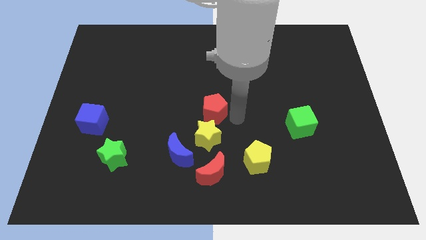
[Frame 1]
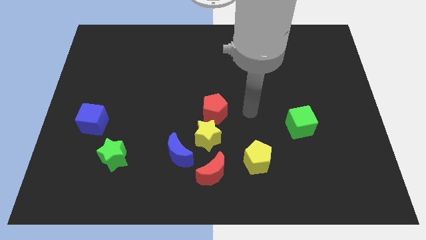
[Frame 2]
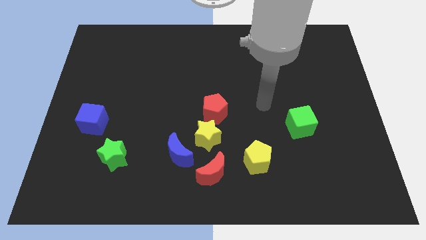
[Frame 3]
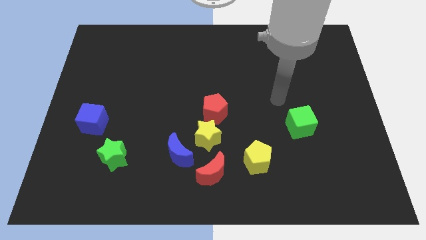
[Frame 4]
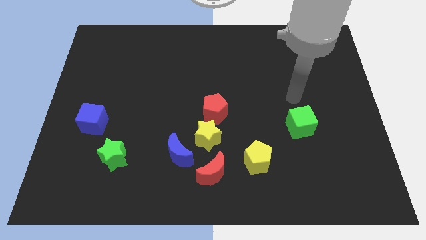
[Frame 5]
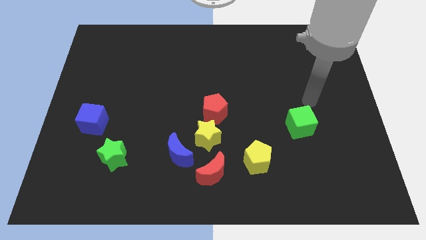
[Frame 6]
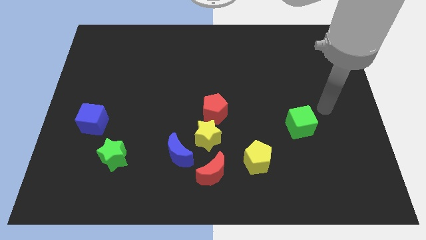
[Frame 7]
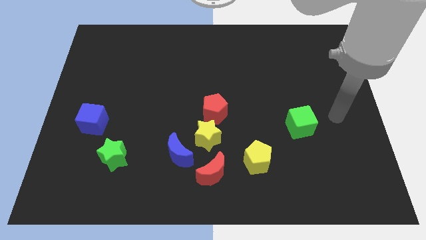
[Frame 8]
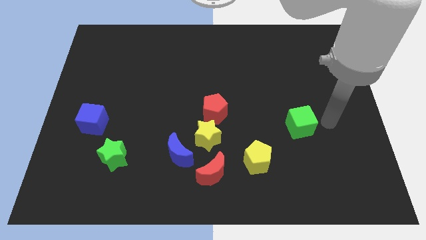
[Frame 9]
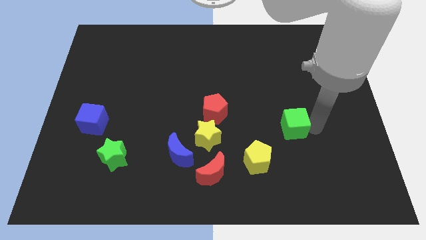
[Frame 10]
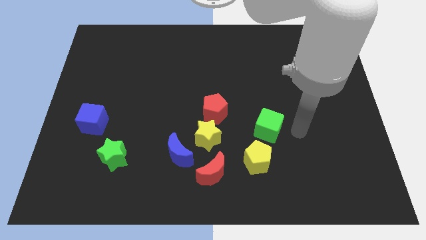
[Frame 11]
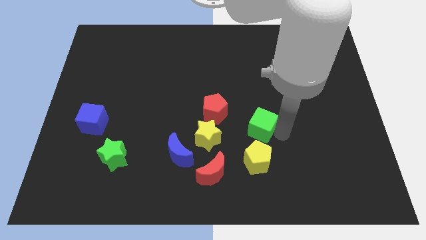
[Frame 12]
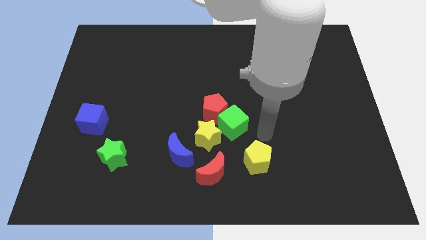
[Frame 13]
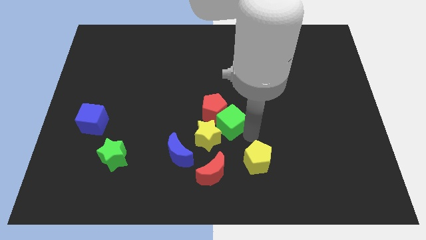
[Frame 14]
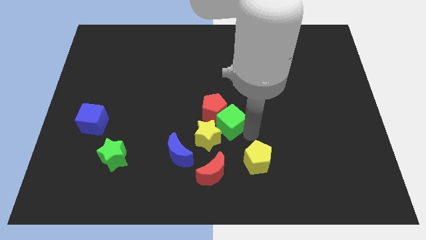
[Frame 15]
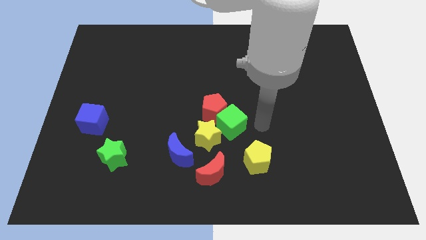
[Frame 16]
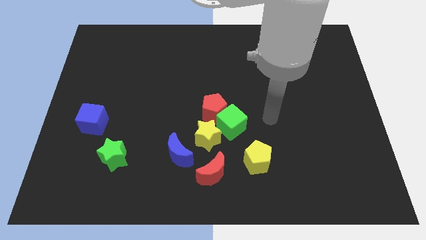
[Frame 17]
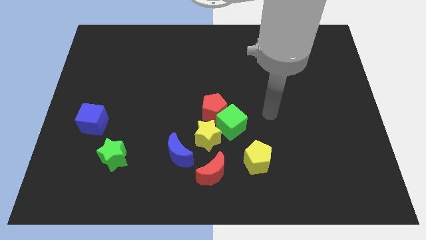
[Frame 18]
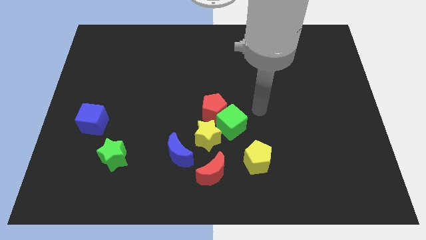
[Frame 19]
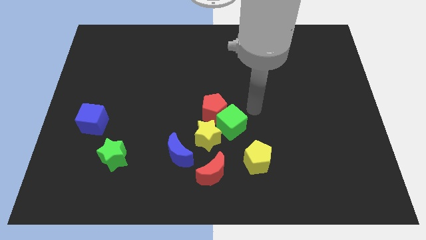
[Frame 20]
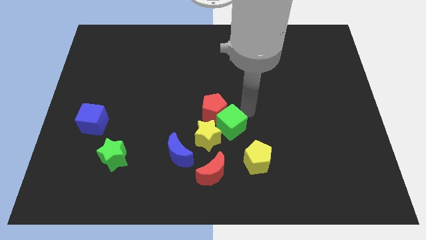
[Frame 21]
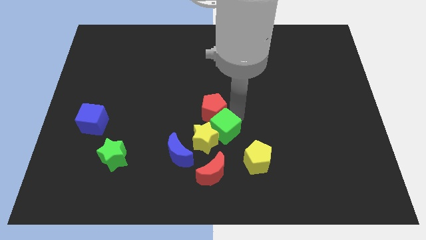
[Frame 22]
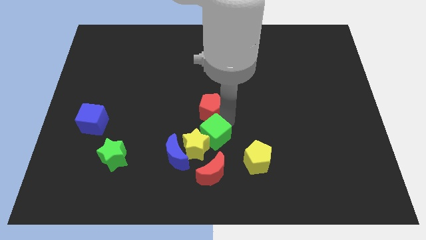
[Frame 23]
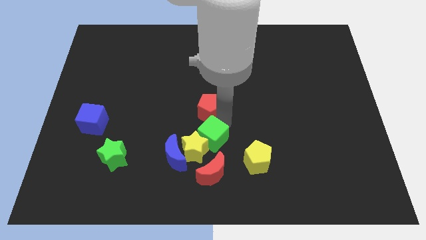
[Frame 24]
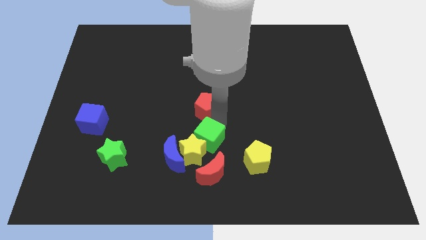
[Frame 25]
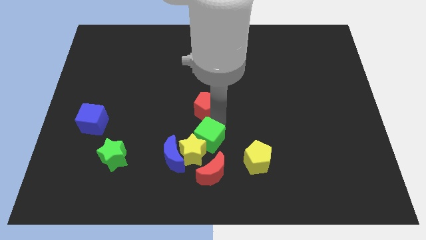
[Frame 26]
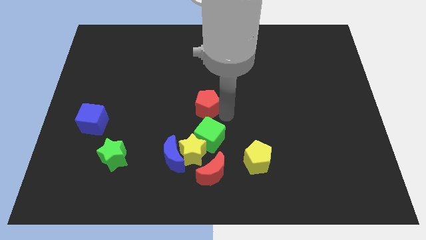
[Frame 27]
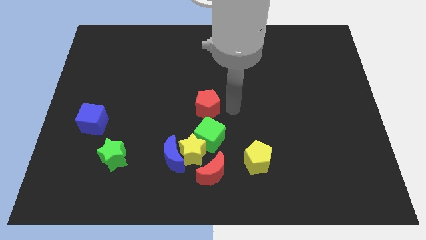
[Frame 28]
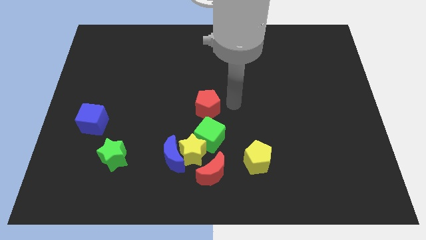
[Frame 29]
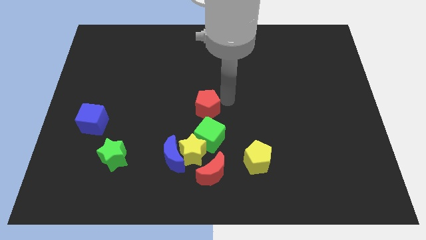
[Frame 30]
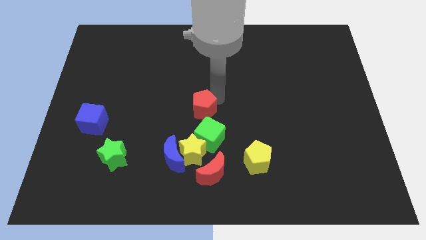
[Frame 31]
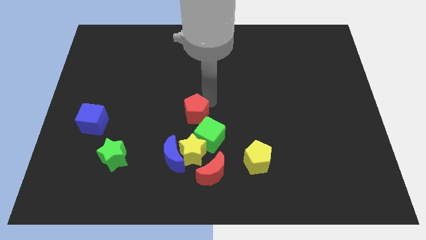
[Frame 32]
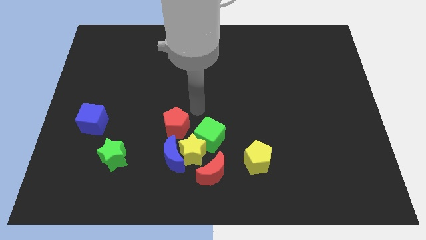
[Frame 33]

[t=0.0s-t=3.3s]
push the green cube red pentagon and yellow star towards the blue moon

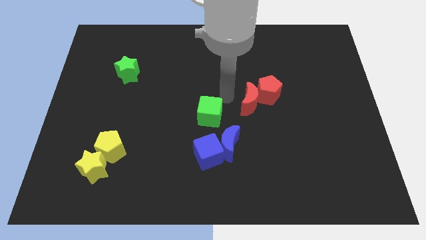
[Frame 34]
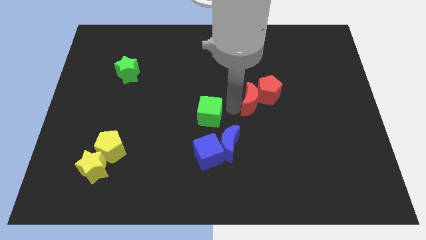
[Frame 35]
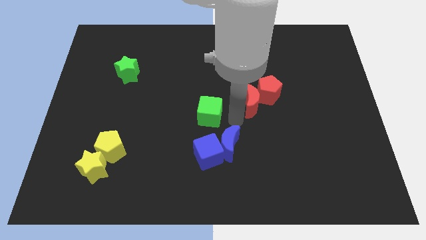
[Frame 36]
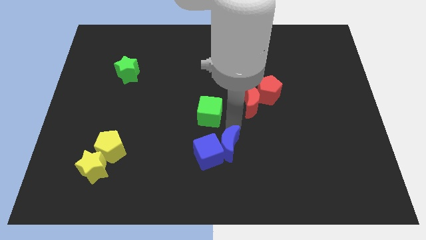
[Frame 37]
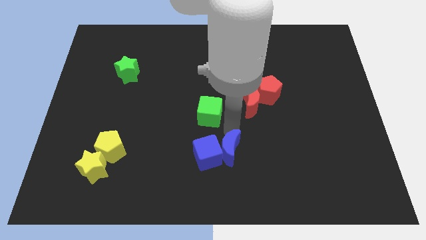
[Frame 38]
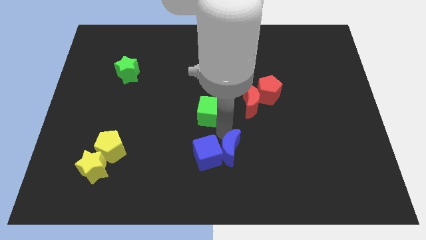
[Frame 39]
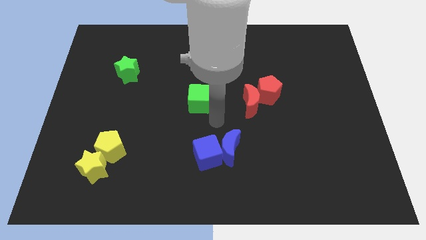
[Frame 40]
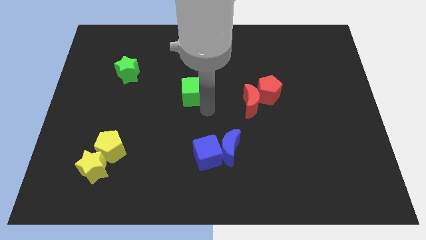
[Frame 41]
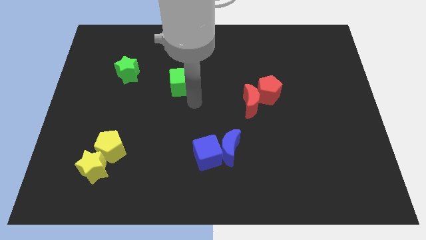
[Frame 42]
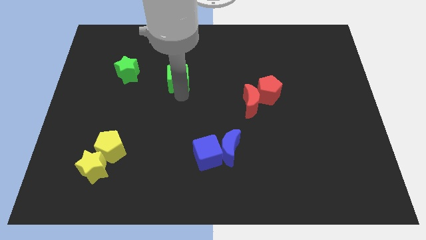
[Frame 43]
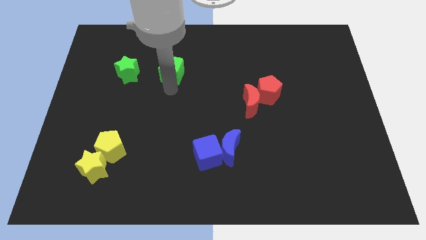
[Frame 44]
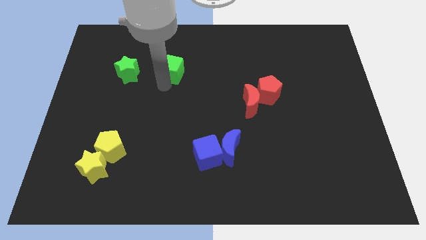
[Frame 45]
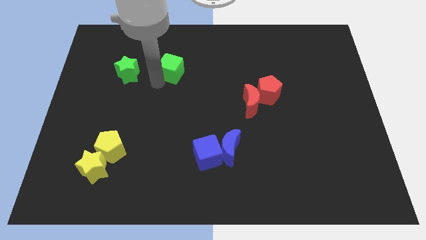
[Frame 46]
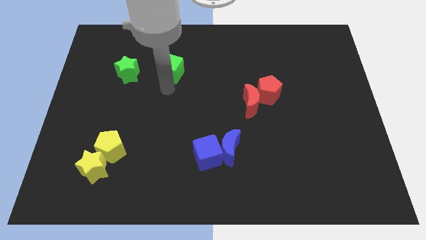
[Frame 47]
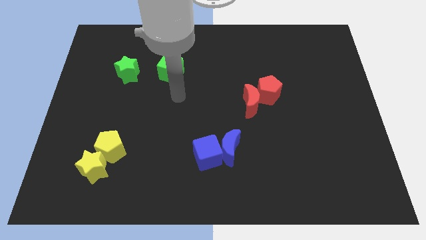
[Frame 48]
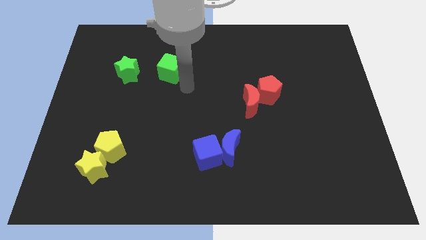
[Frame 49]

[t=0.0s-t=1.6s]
place the green cube right to the green star

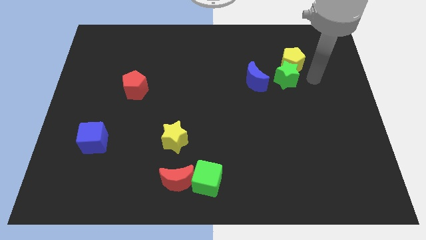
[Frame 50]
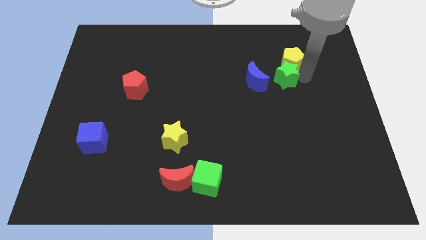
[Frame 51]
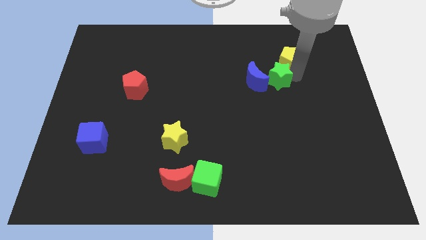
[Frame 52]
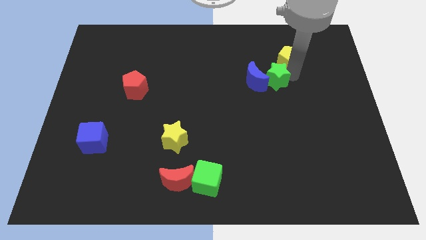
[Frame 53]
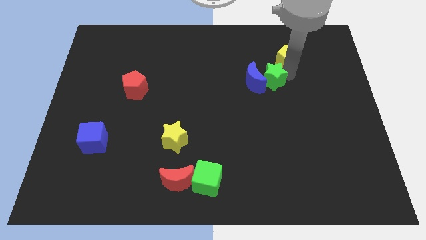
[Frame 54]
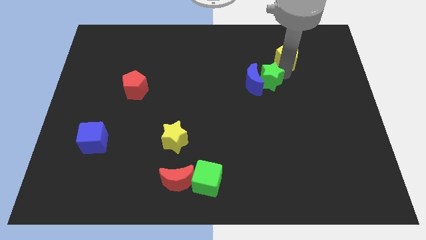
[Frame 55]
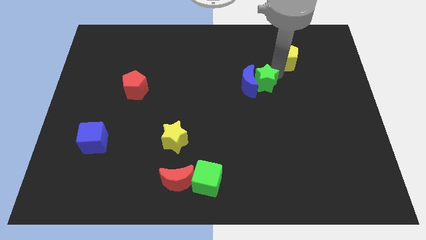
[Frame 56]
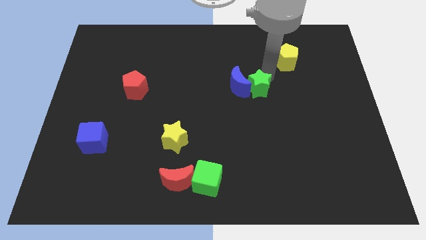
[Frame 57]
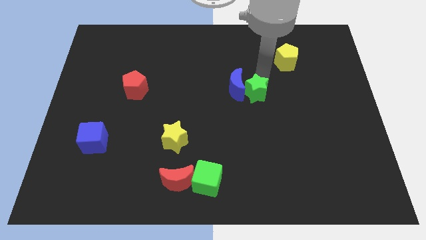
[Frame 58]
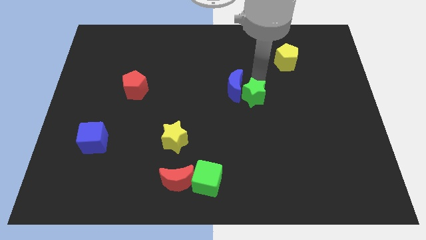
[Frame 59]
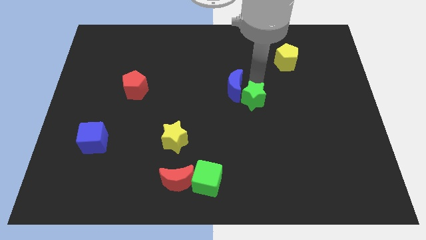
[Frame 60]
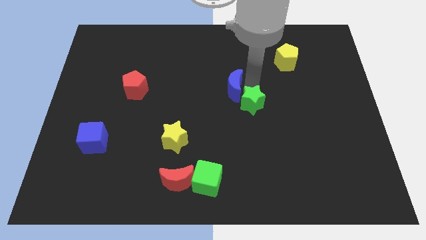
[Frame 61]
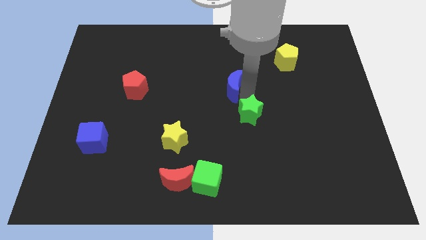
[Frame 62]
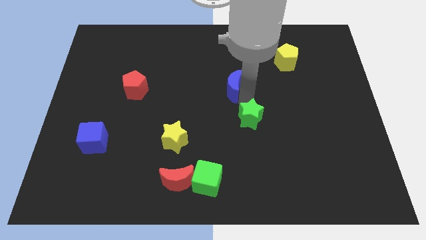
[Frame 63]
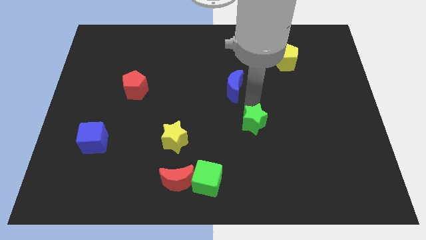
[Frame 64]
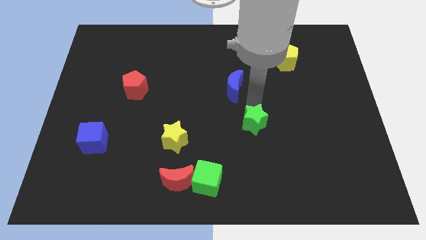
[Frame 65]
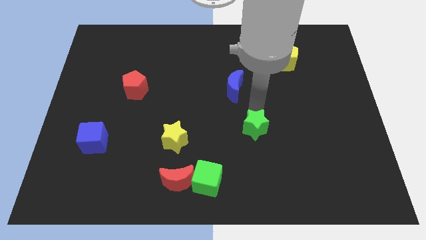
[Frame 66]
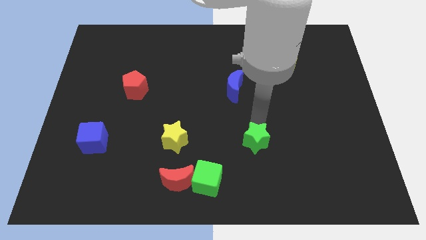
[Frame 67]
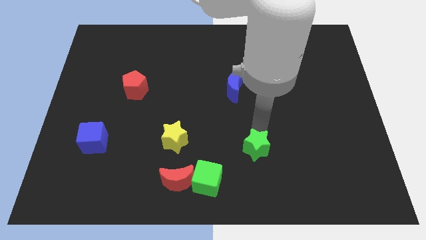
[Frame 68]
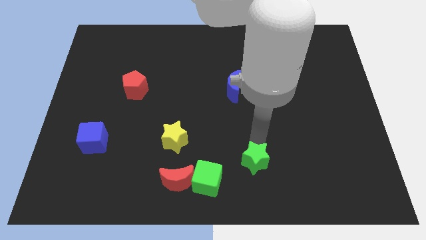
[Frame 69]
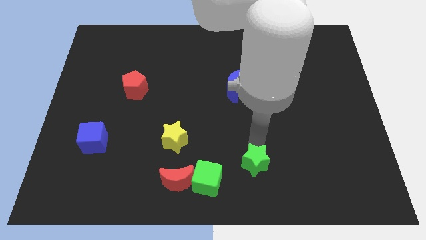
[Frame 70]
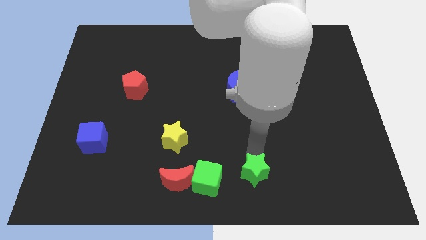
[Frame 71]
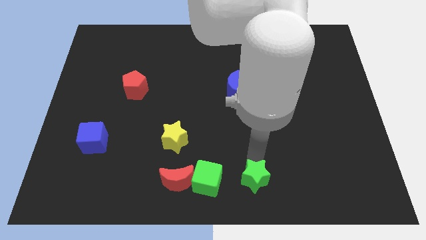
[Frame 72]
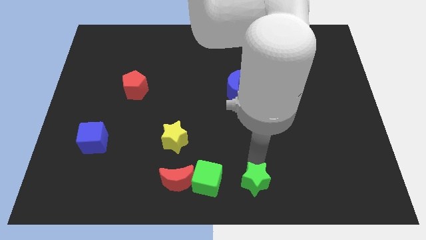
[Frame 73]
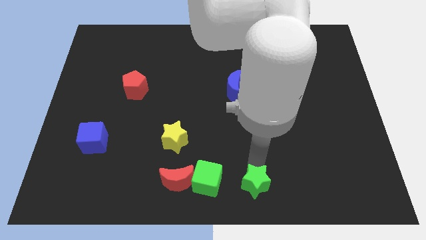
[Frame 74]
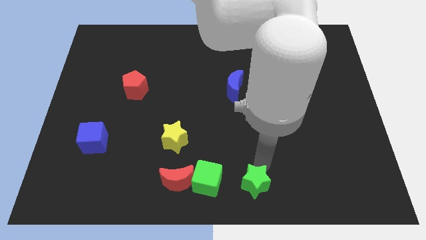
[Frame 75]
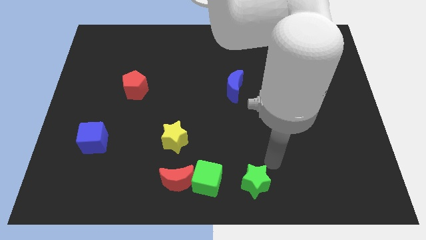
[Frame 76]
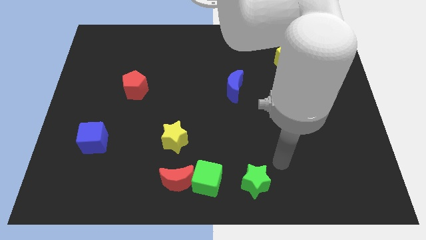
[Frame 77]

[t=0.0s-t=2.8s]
move the green star to the right of the green cube

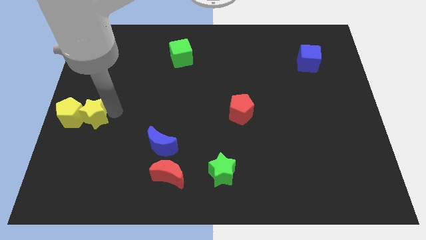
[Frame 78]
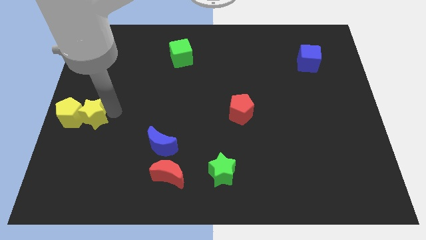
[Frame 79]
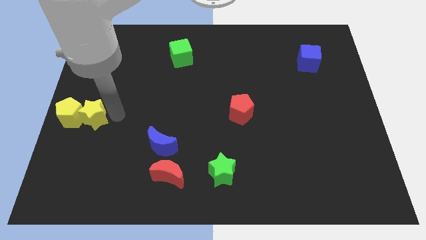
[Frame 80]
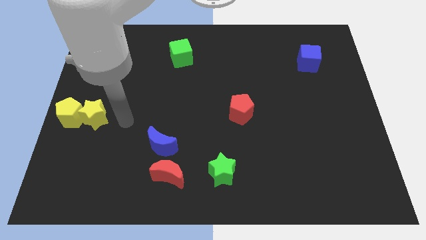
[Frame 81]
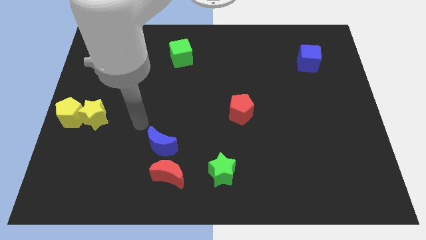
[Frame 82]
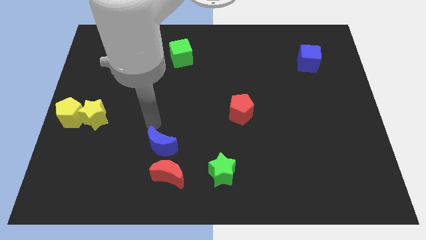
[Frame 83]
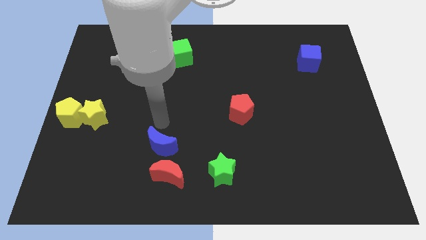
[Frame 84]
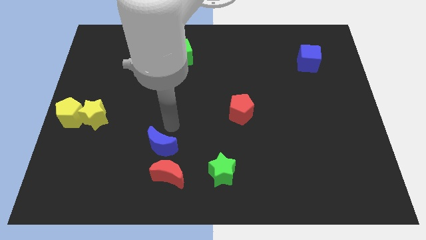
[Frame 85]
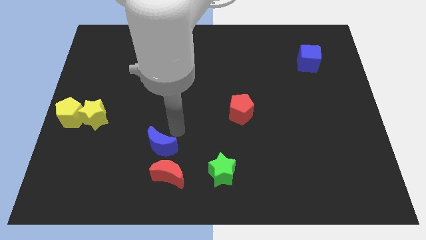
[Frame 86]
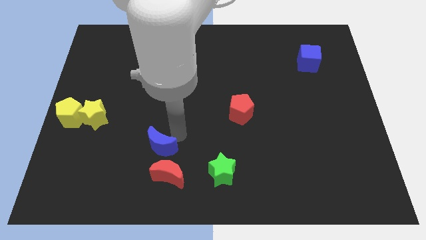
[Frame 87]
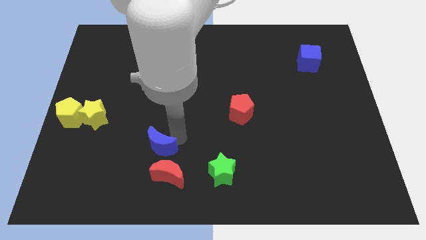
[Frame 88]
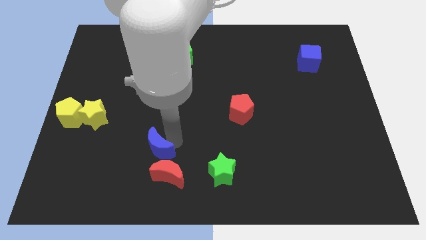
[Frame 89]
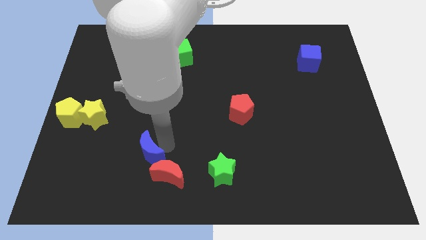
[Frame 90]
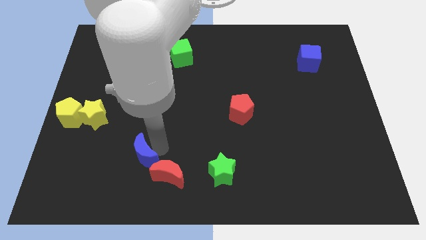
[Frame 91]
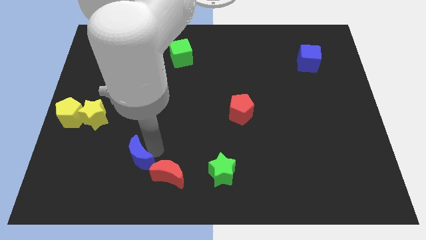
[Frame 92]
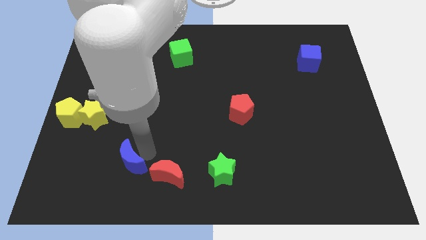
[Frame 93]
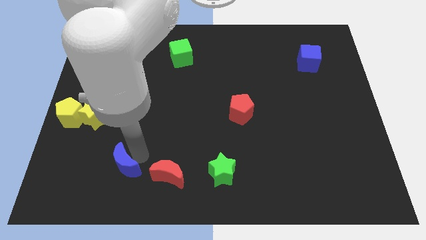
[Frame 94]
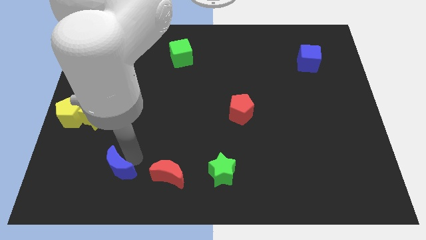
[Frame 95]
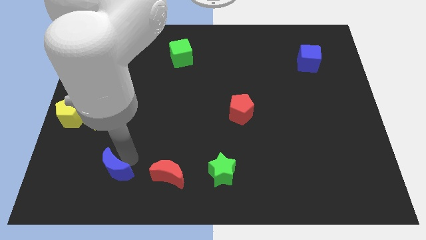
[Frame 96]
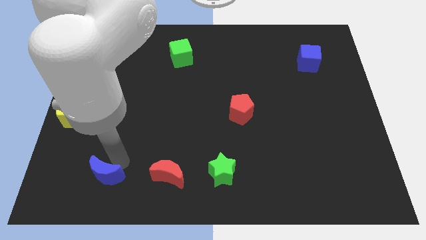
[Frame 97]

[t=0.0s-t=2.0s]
place the blue moon to the left of red moon
